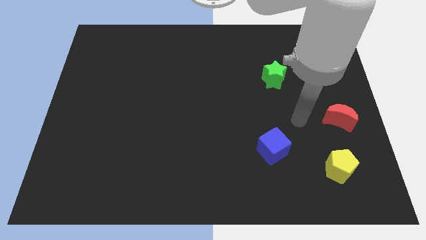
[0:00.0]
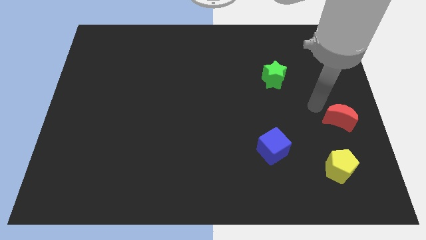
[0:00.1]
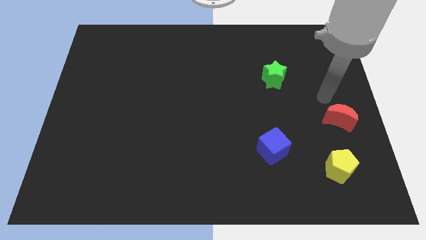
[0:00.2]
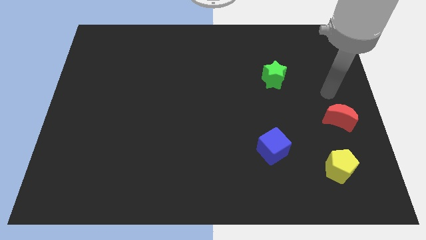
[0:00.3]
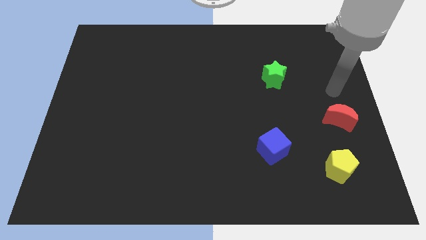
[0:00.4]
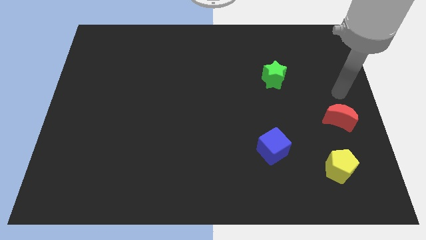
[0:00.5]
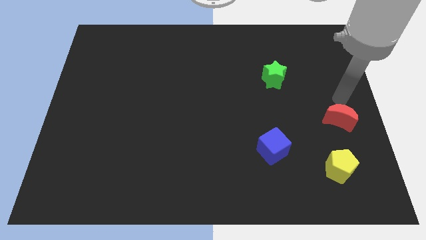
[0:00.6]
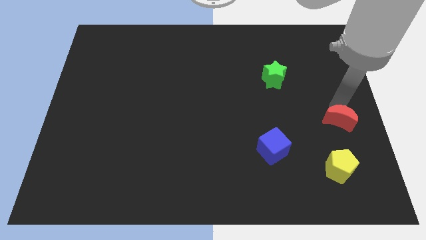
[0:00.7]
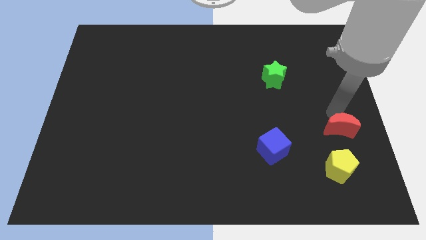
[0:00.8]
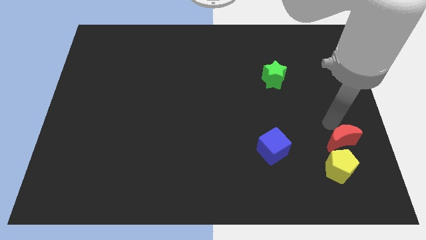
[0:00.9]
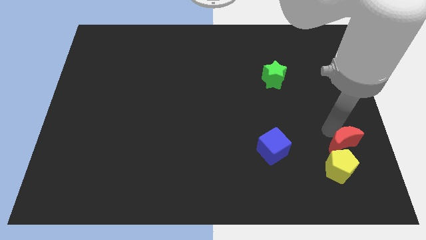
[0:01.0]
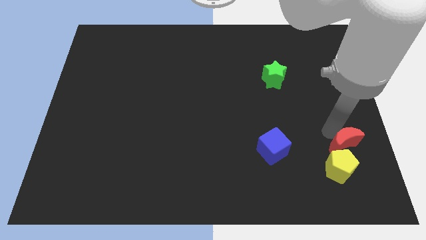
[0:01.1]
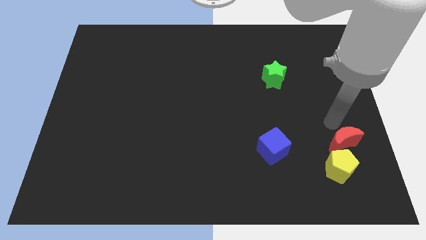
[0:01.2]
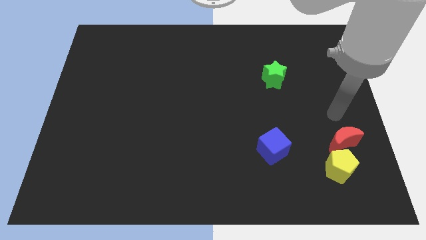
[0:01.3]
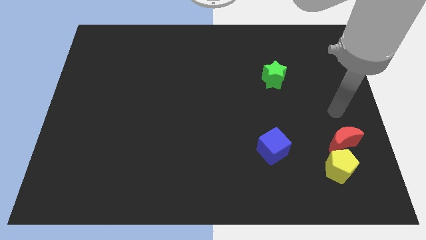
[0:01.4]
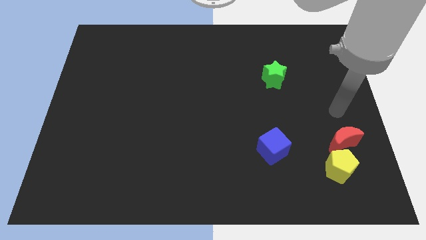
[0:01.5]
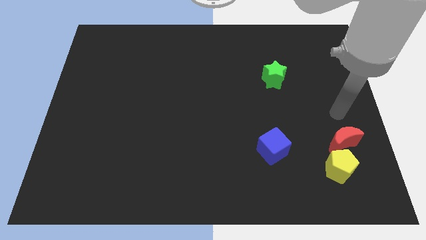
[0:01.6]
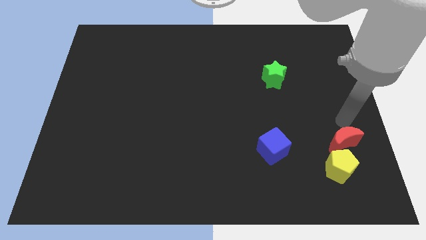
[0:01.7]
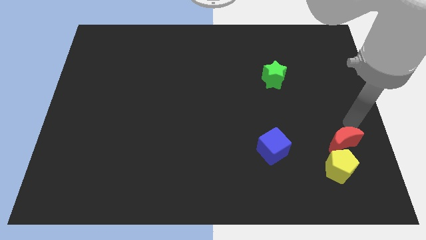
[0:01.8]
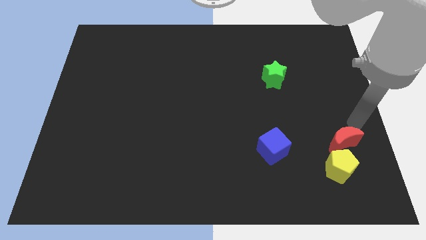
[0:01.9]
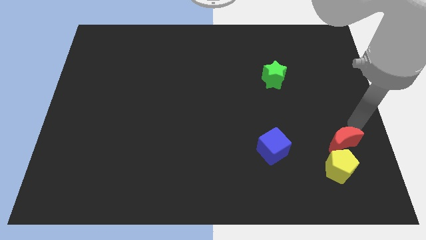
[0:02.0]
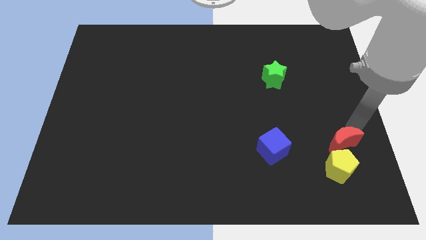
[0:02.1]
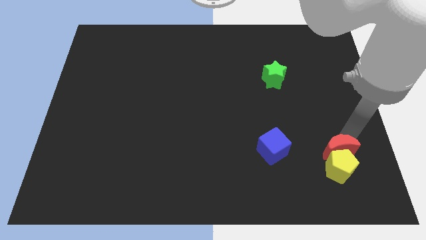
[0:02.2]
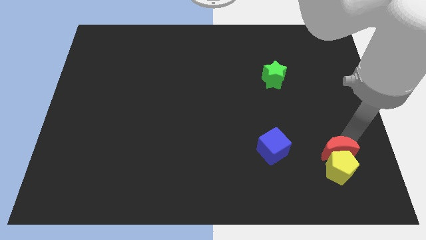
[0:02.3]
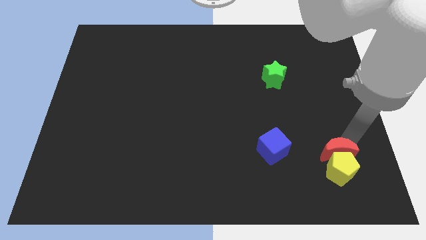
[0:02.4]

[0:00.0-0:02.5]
move the moon towards the yellow pentagon

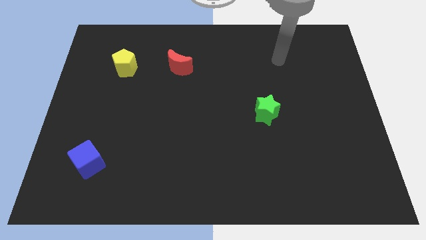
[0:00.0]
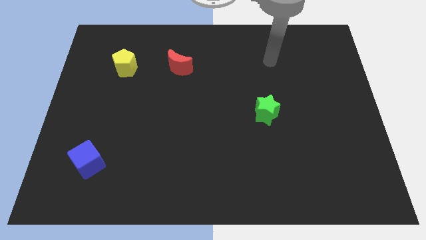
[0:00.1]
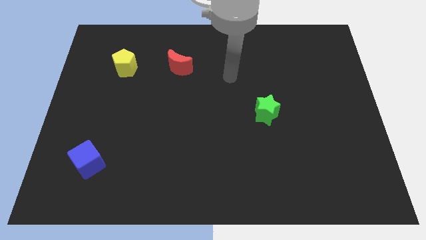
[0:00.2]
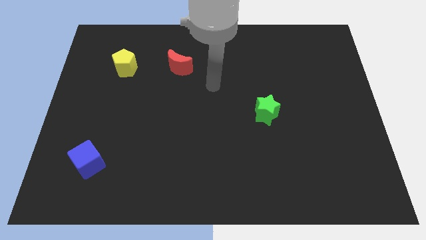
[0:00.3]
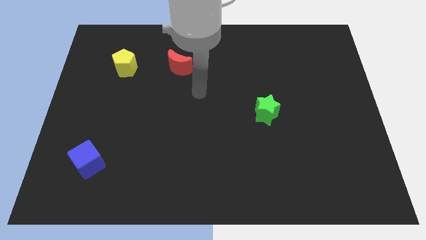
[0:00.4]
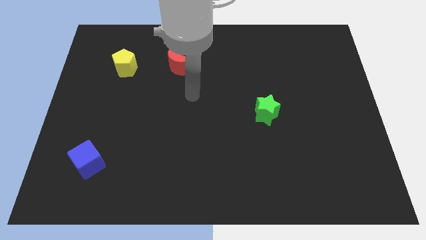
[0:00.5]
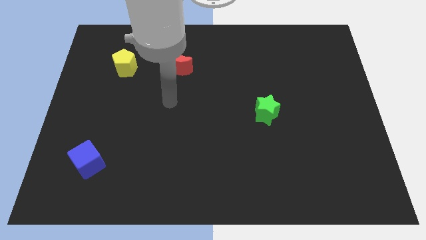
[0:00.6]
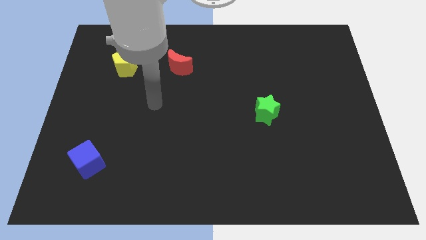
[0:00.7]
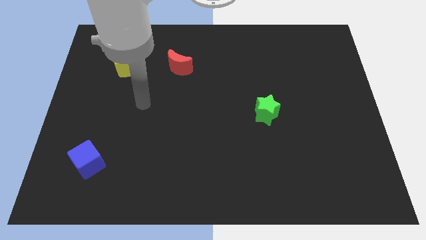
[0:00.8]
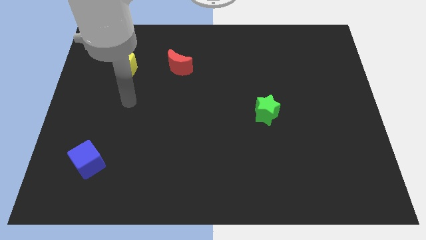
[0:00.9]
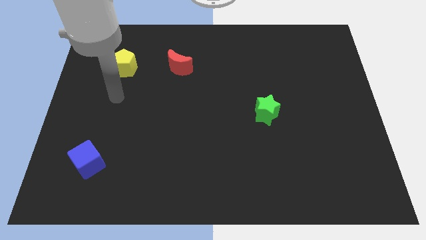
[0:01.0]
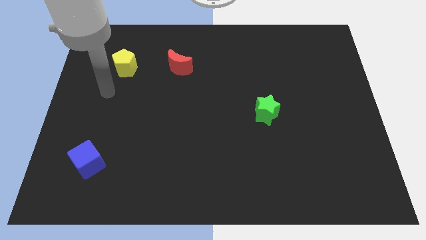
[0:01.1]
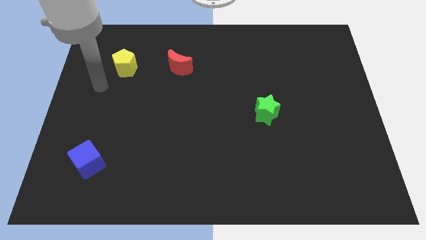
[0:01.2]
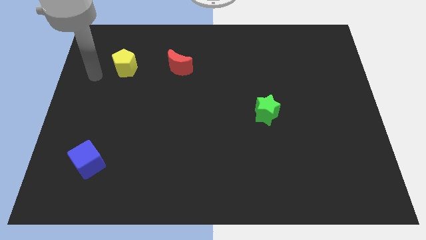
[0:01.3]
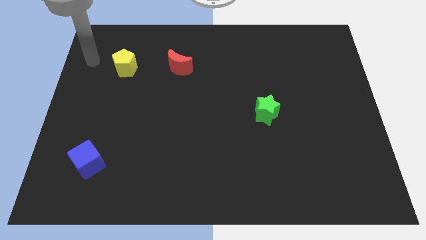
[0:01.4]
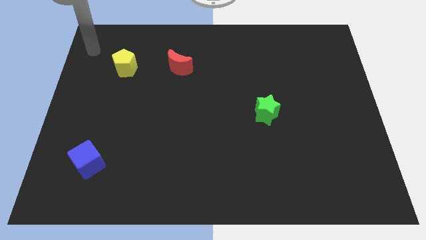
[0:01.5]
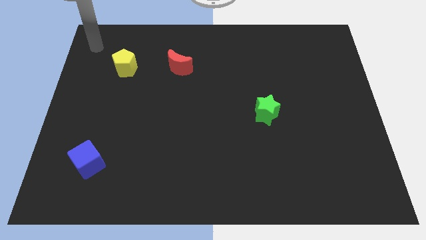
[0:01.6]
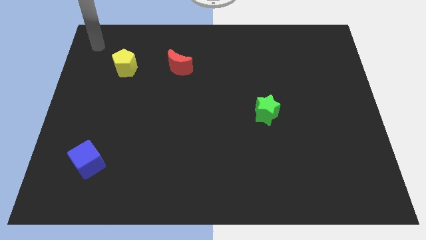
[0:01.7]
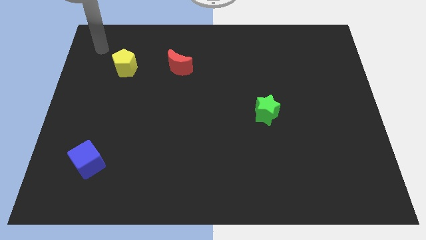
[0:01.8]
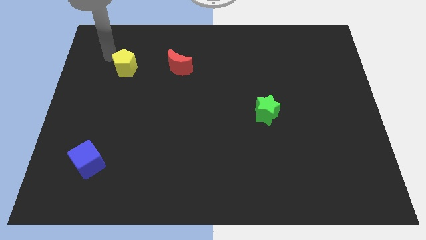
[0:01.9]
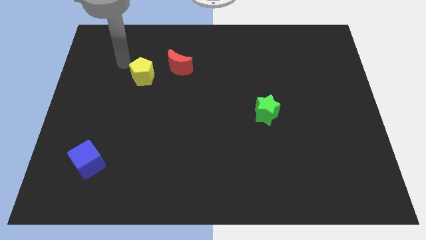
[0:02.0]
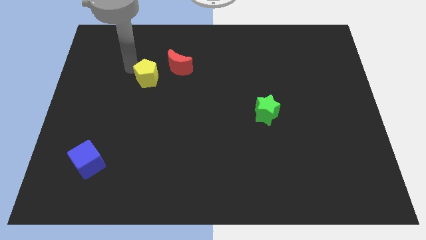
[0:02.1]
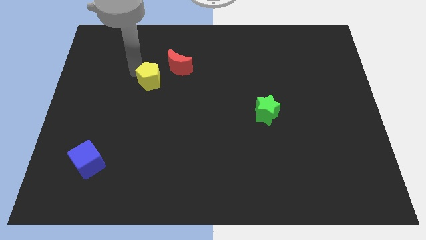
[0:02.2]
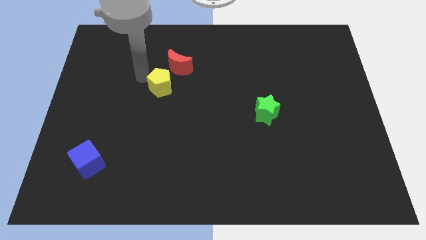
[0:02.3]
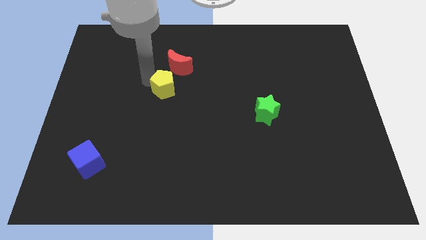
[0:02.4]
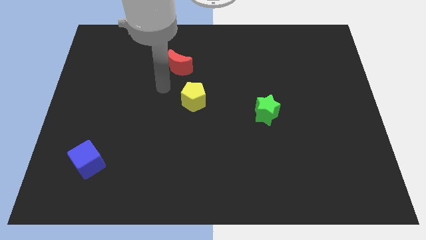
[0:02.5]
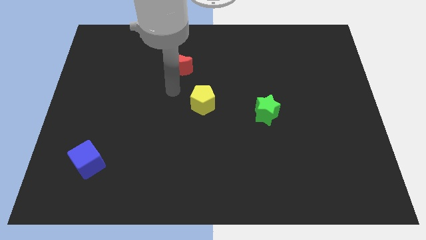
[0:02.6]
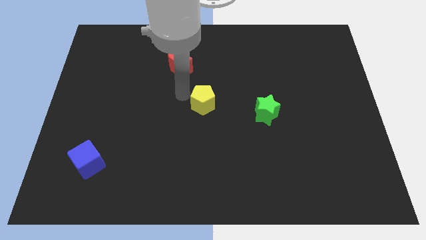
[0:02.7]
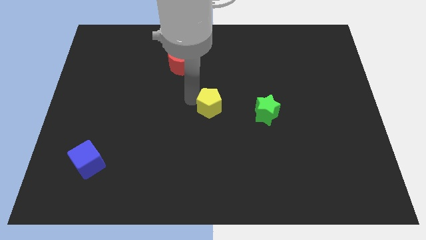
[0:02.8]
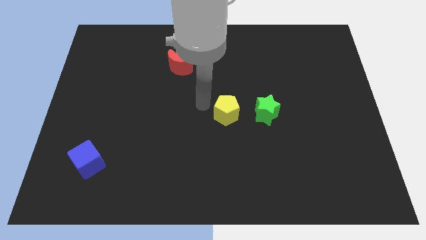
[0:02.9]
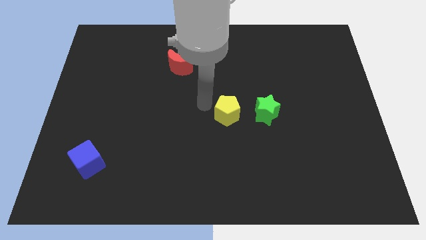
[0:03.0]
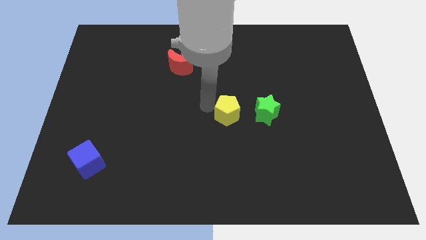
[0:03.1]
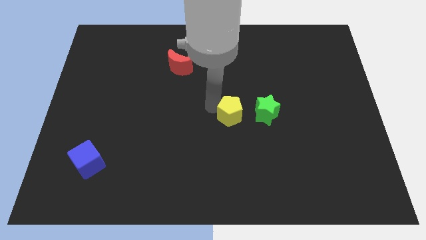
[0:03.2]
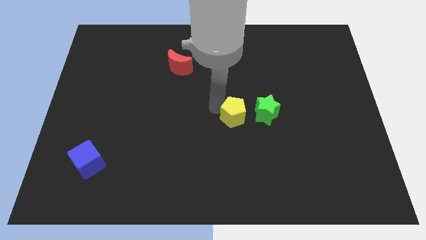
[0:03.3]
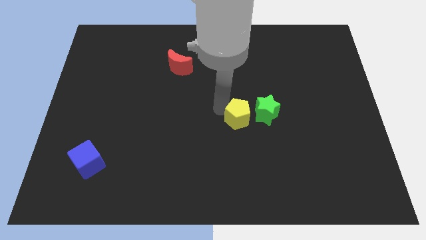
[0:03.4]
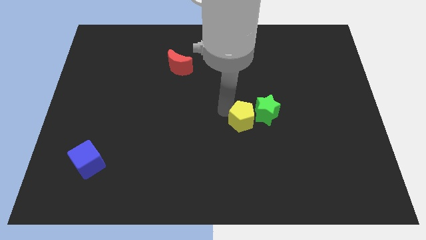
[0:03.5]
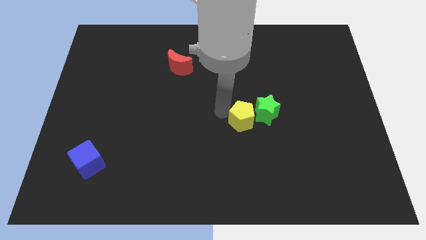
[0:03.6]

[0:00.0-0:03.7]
push the pentagon to the green block

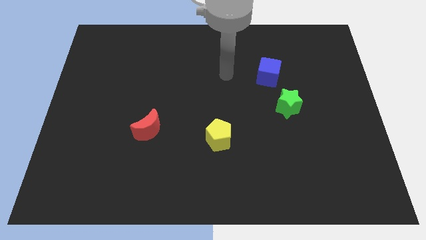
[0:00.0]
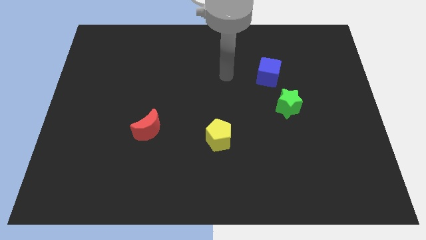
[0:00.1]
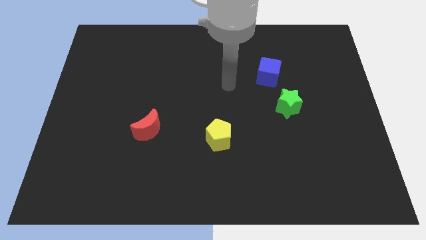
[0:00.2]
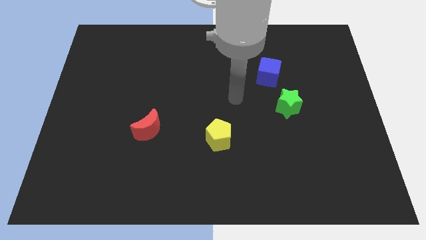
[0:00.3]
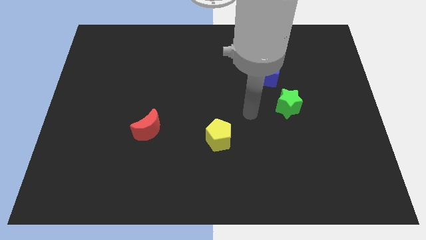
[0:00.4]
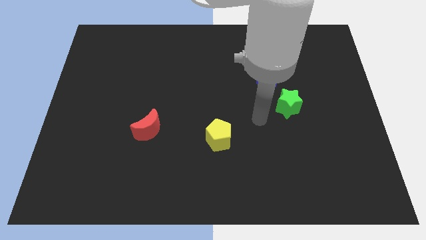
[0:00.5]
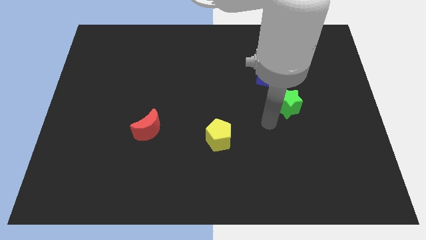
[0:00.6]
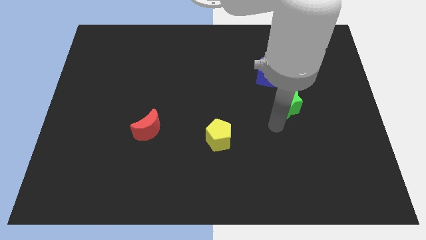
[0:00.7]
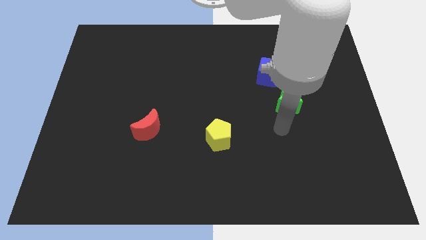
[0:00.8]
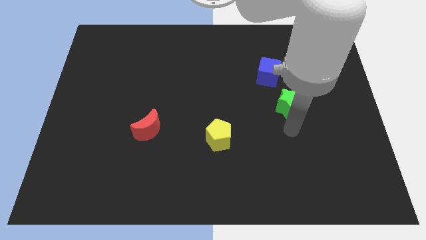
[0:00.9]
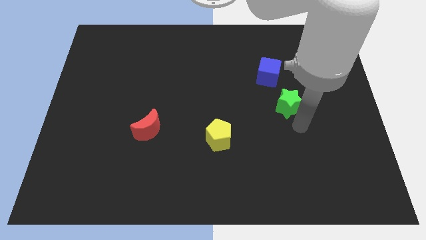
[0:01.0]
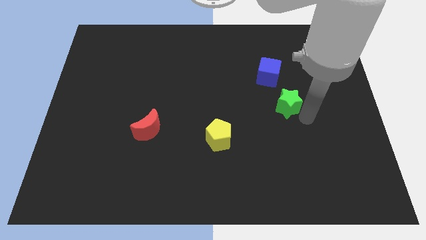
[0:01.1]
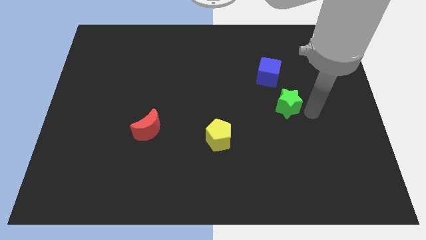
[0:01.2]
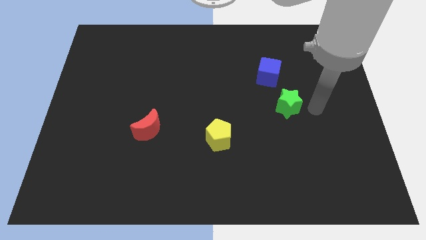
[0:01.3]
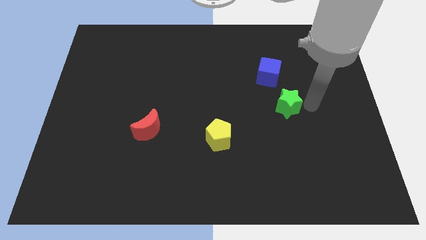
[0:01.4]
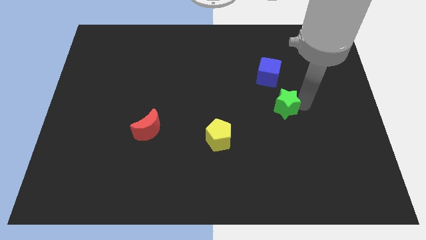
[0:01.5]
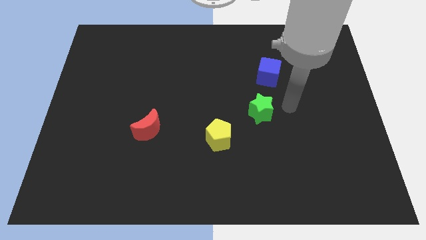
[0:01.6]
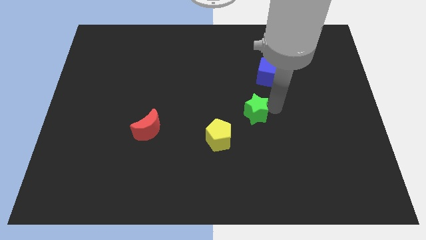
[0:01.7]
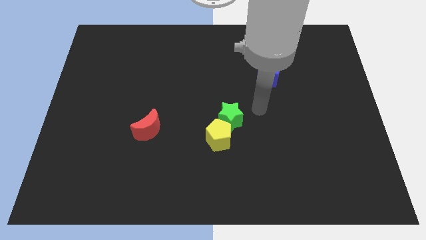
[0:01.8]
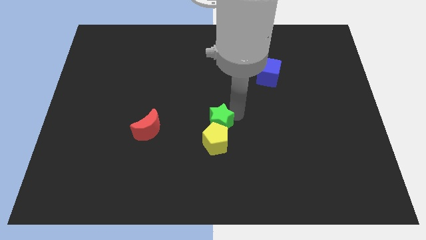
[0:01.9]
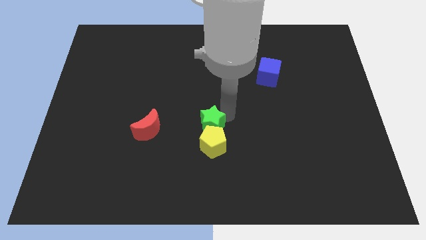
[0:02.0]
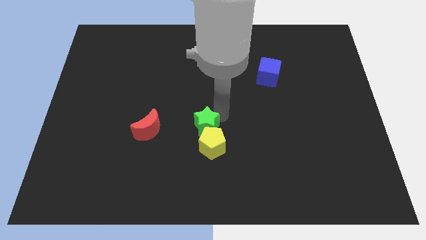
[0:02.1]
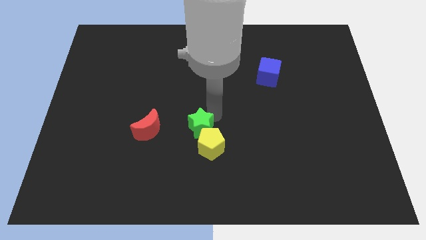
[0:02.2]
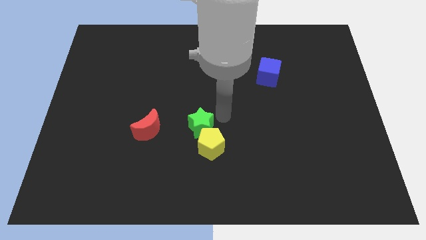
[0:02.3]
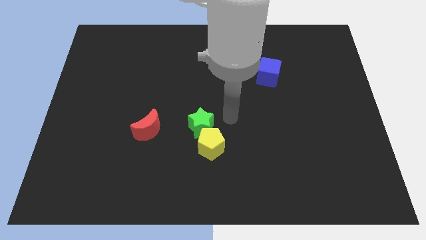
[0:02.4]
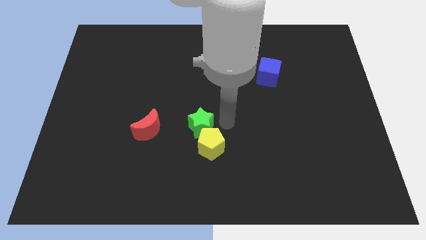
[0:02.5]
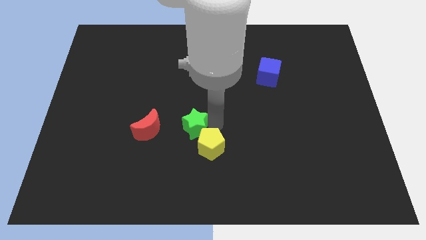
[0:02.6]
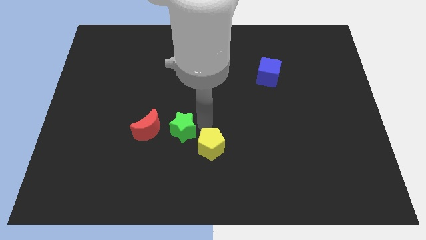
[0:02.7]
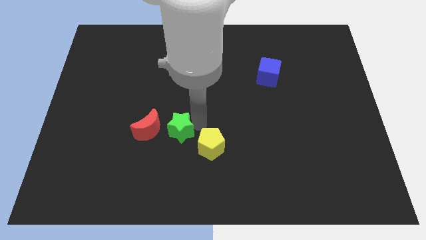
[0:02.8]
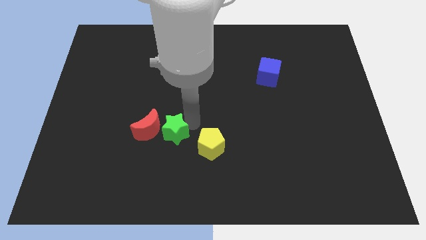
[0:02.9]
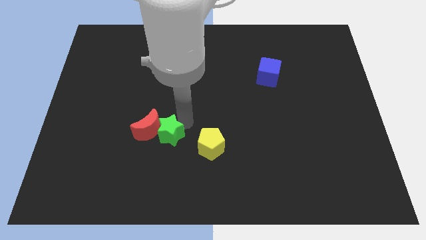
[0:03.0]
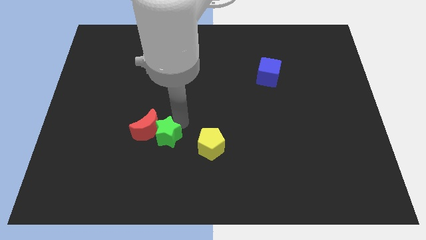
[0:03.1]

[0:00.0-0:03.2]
slide the green star to the moon
